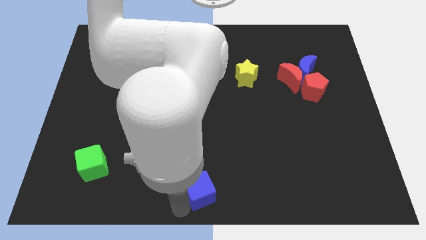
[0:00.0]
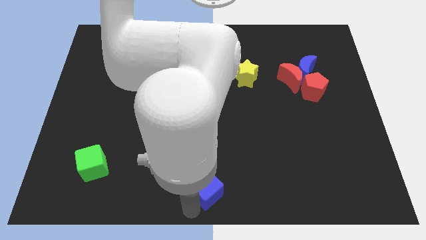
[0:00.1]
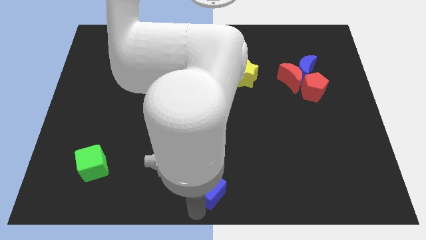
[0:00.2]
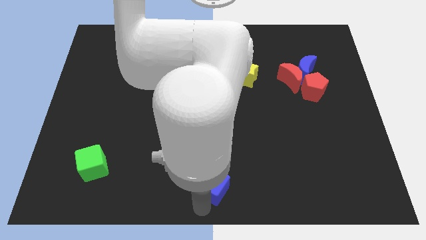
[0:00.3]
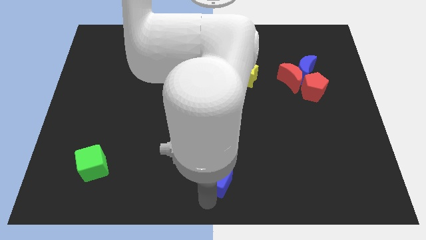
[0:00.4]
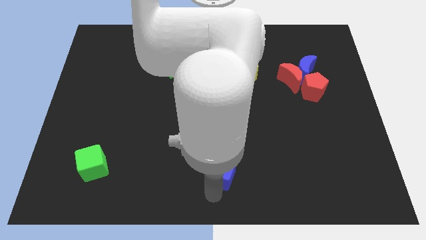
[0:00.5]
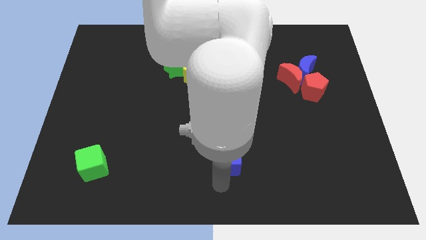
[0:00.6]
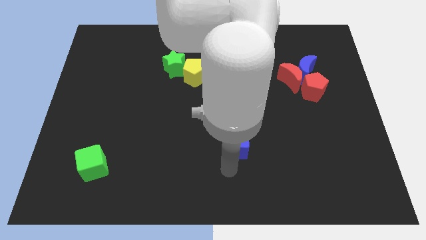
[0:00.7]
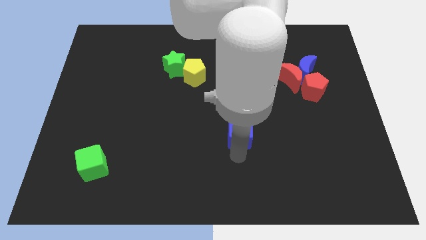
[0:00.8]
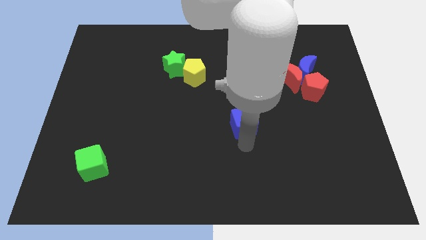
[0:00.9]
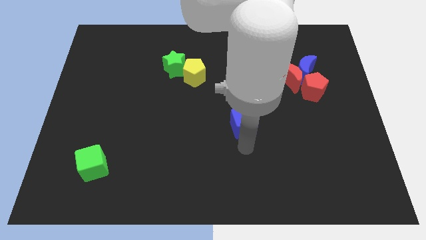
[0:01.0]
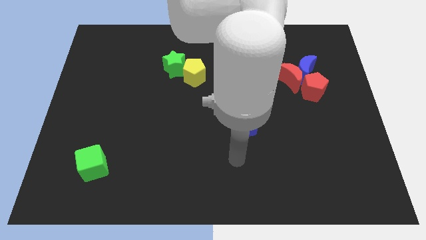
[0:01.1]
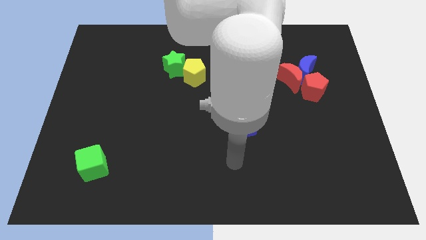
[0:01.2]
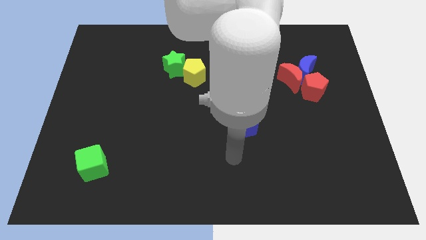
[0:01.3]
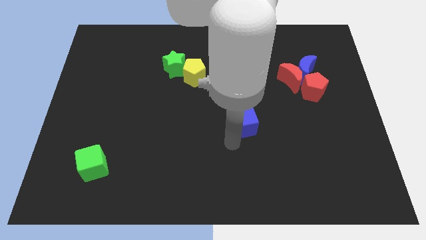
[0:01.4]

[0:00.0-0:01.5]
move the blue cube below the yellow star at the center

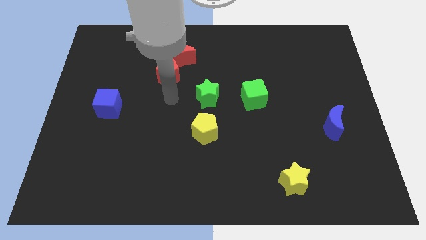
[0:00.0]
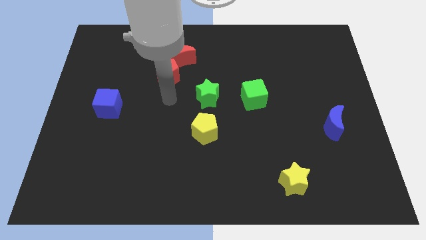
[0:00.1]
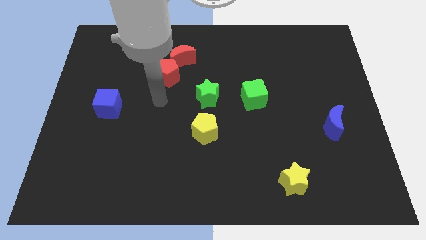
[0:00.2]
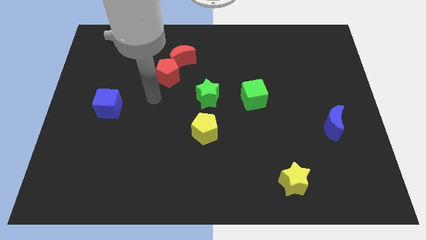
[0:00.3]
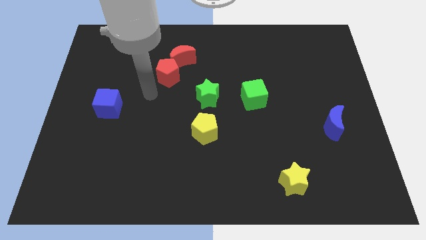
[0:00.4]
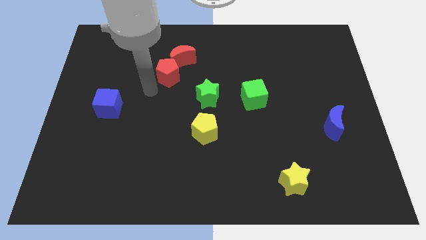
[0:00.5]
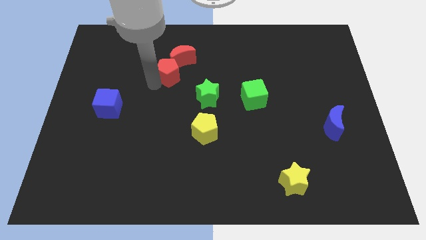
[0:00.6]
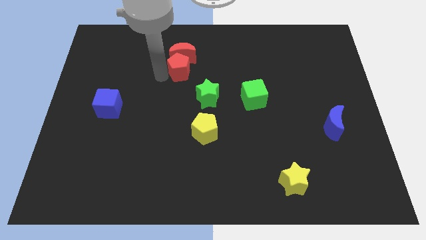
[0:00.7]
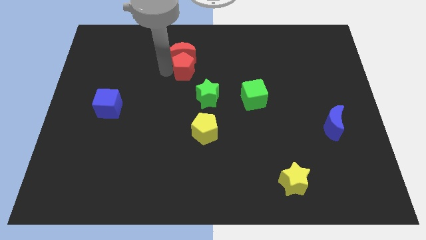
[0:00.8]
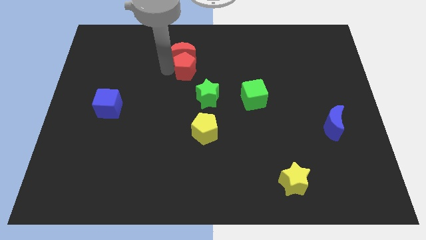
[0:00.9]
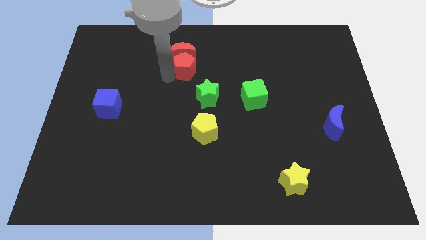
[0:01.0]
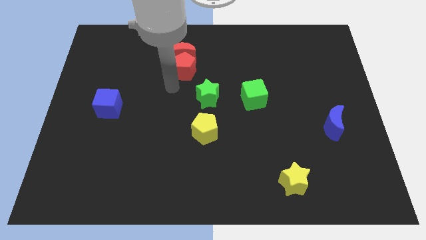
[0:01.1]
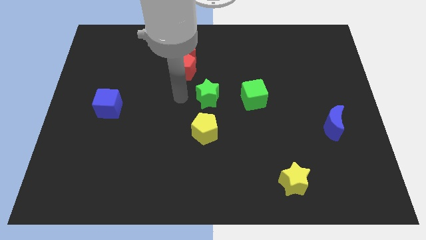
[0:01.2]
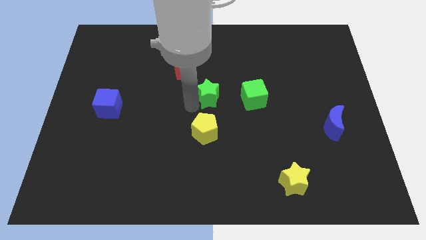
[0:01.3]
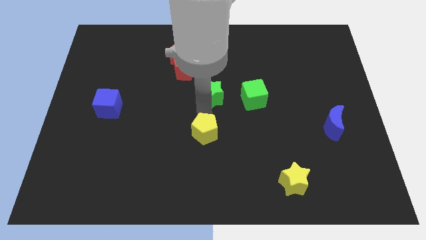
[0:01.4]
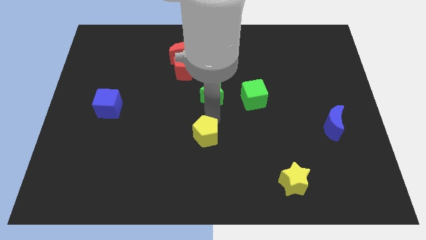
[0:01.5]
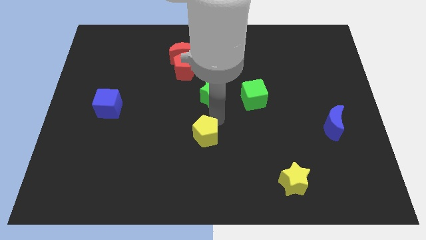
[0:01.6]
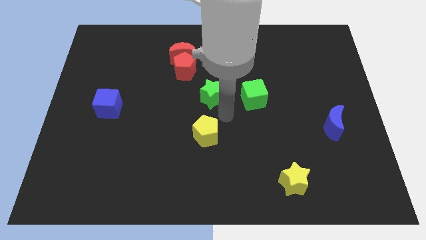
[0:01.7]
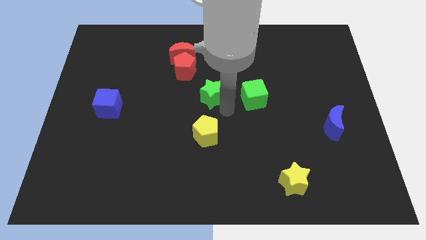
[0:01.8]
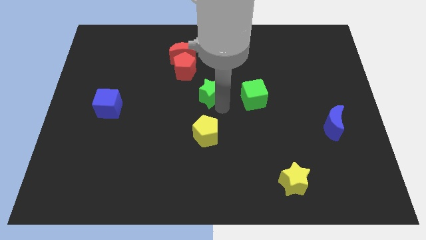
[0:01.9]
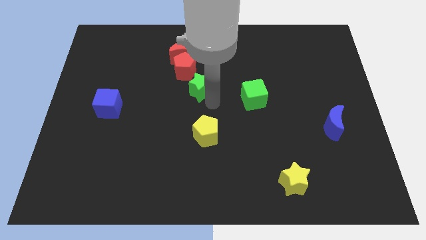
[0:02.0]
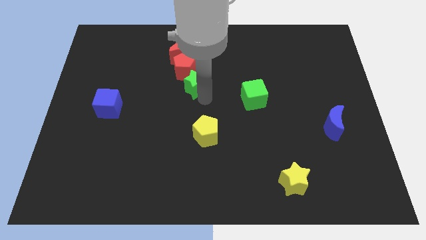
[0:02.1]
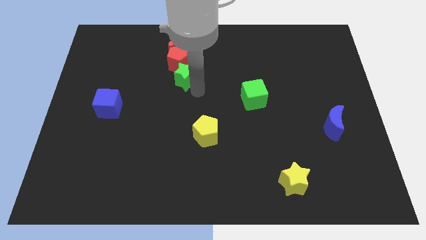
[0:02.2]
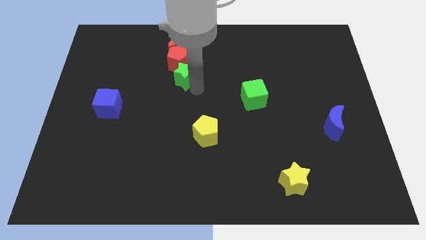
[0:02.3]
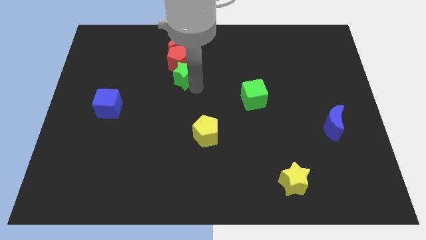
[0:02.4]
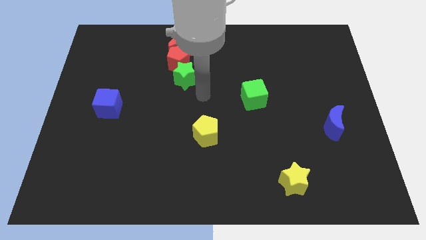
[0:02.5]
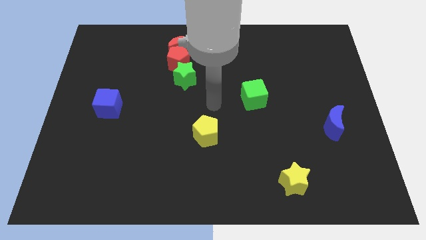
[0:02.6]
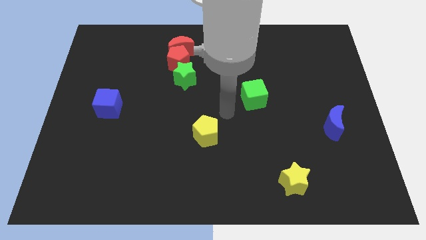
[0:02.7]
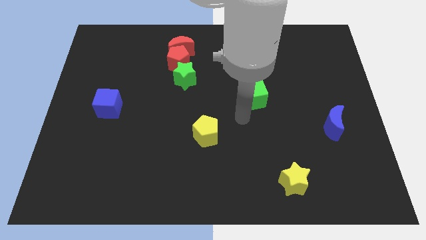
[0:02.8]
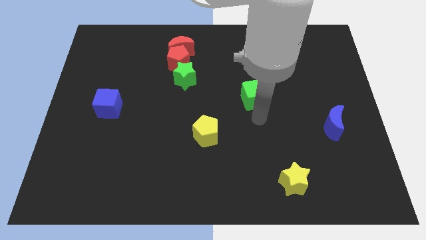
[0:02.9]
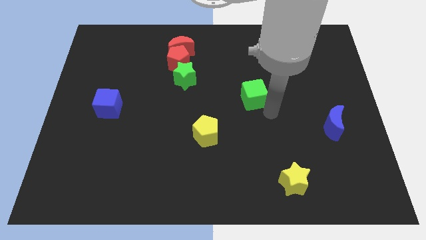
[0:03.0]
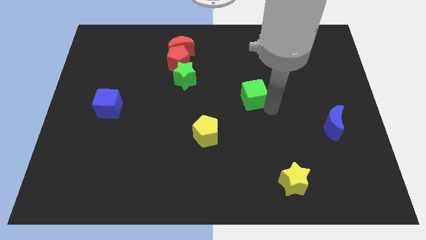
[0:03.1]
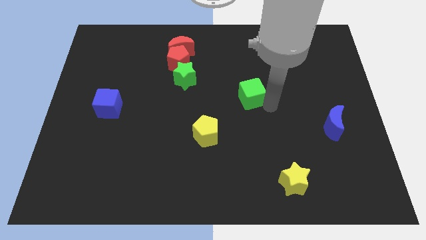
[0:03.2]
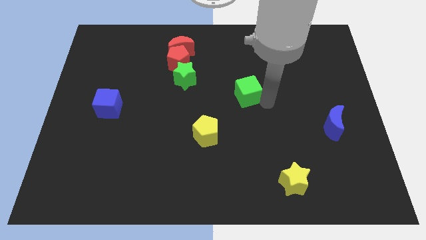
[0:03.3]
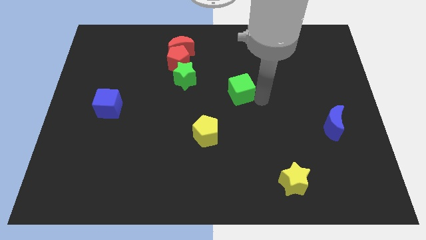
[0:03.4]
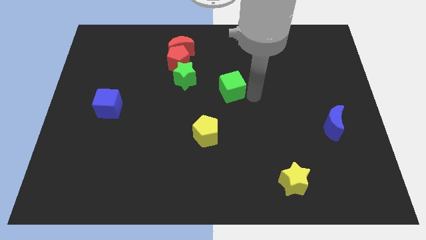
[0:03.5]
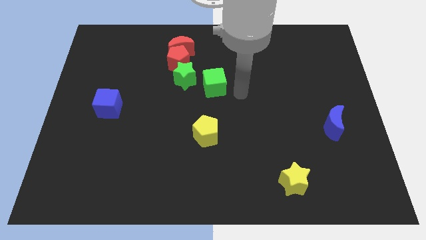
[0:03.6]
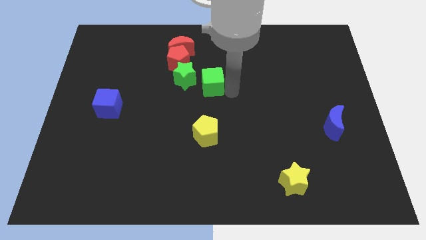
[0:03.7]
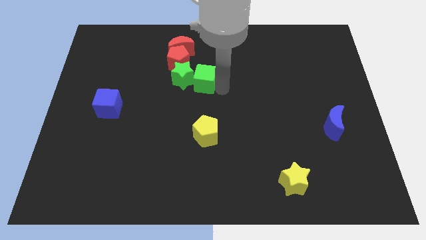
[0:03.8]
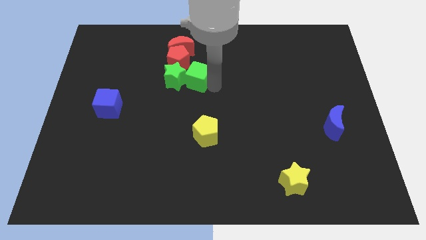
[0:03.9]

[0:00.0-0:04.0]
group up red and green blocks together

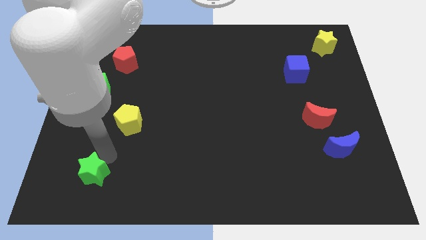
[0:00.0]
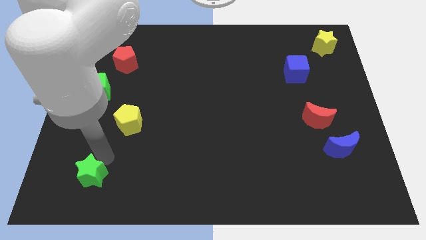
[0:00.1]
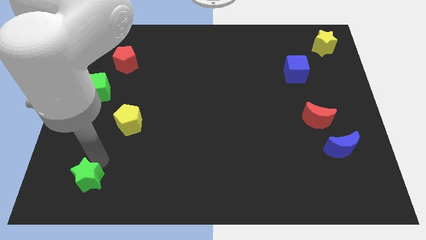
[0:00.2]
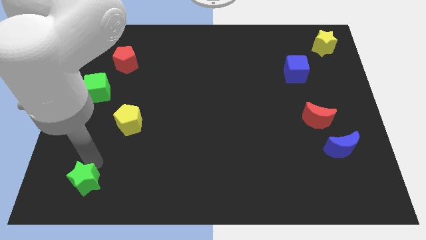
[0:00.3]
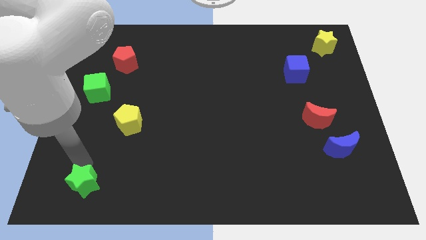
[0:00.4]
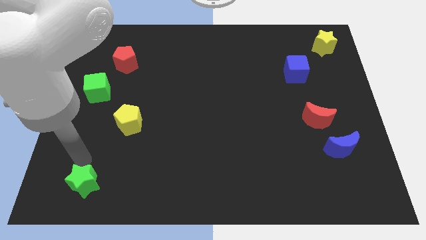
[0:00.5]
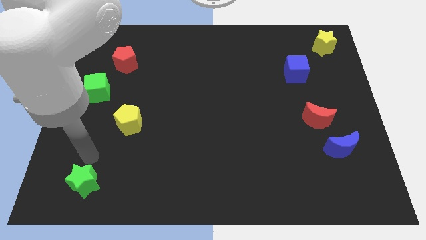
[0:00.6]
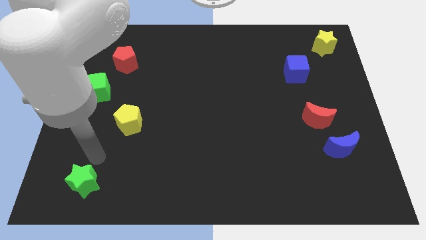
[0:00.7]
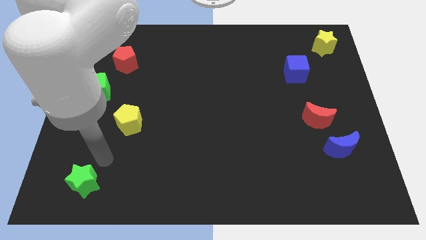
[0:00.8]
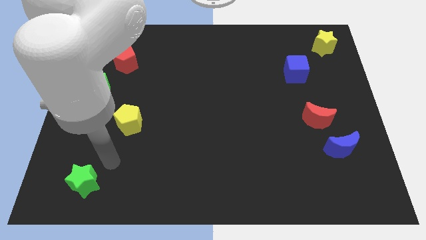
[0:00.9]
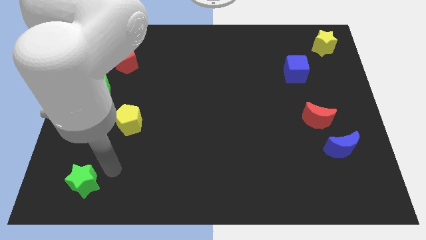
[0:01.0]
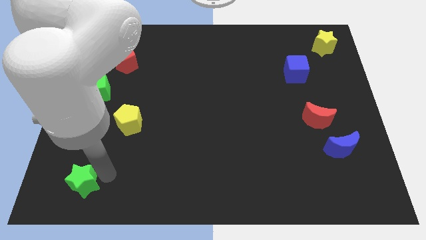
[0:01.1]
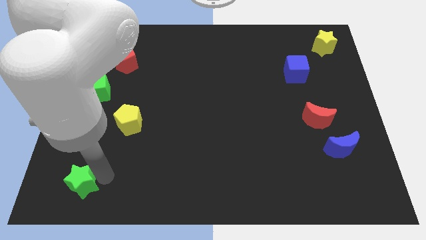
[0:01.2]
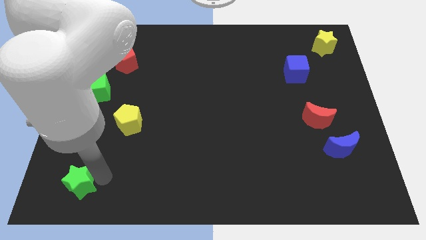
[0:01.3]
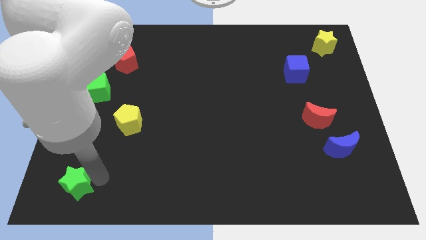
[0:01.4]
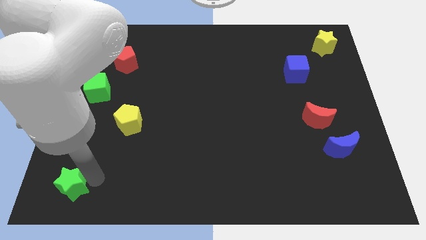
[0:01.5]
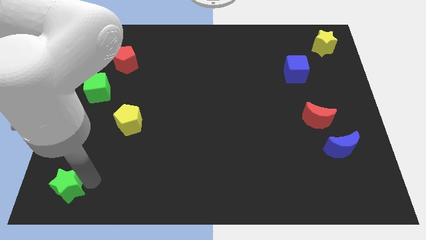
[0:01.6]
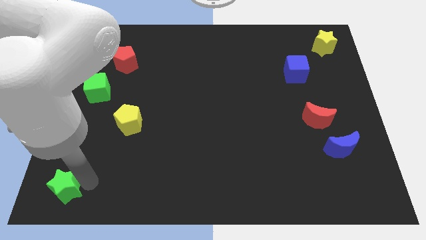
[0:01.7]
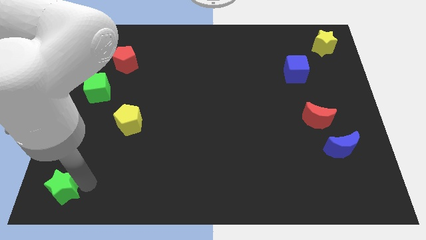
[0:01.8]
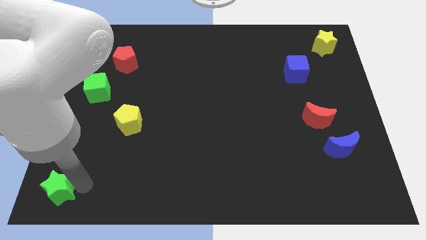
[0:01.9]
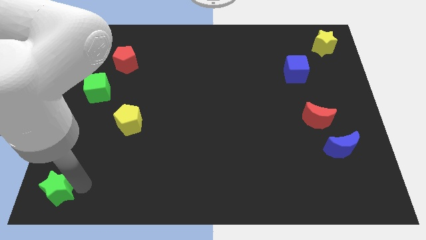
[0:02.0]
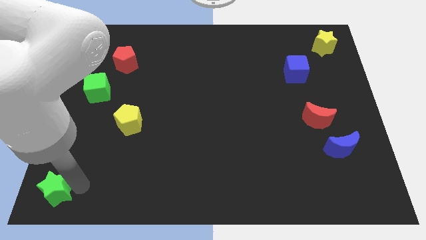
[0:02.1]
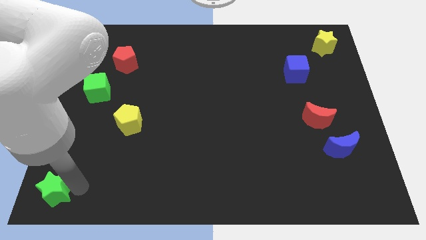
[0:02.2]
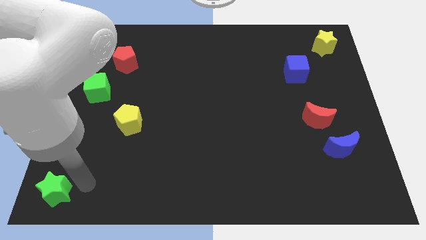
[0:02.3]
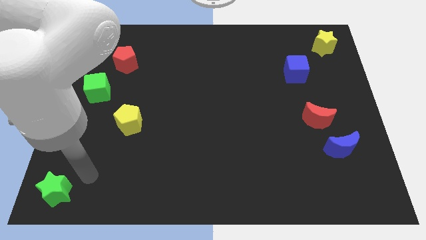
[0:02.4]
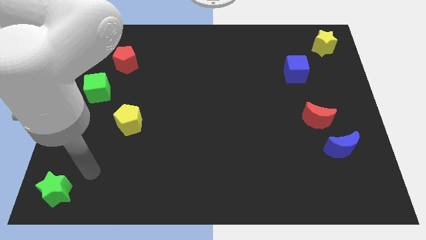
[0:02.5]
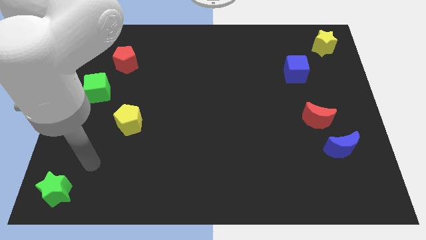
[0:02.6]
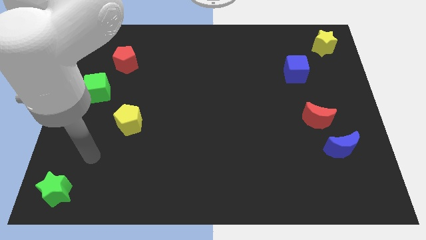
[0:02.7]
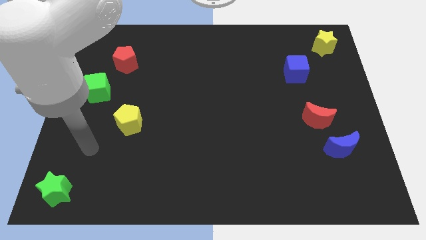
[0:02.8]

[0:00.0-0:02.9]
move the green star at the bottom left corner of the board

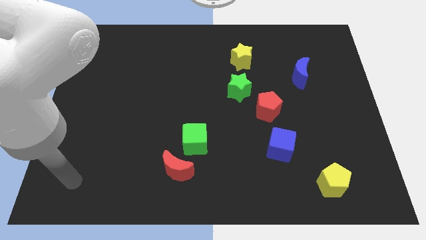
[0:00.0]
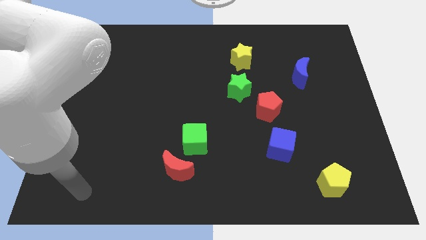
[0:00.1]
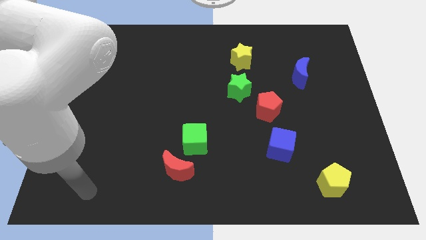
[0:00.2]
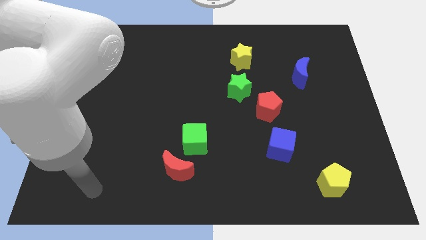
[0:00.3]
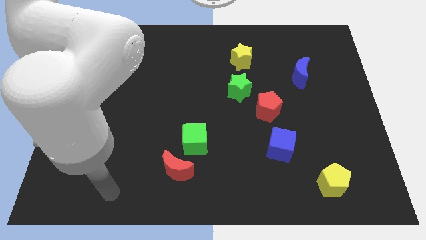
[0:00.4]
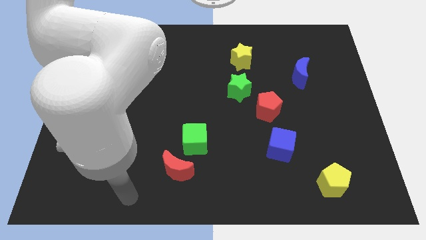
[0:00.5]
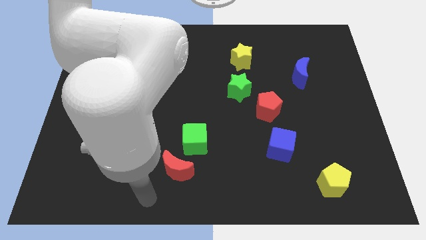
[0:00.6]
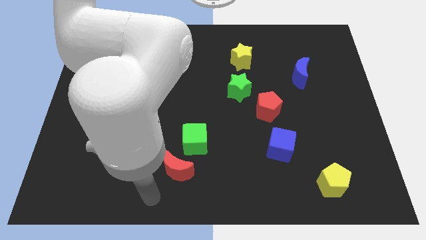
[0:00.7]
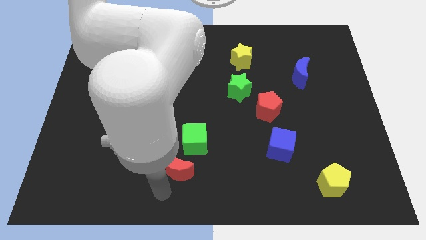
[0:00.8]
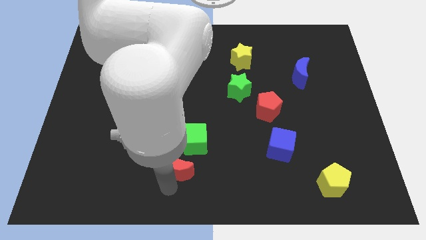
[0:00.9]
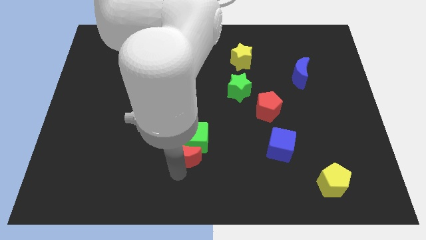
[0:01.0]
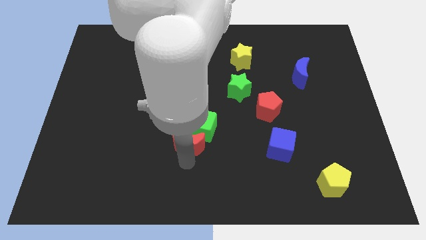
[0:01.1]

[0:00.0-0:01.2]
push the red crescent into the green cube
